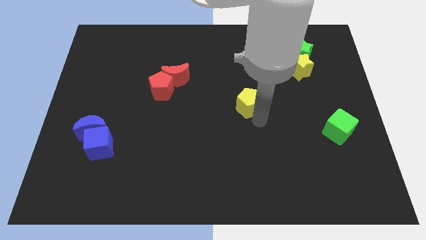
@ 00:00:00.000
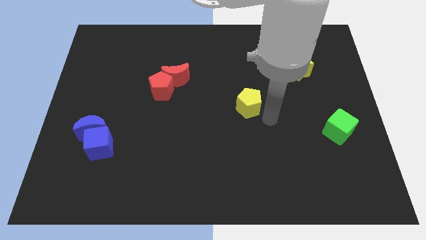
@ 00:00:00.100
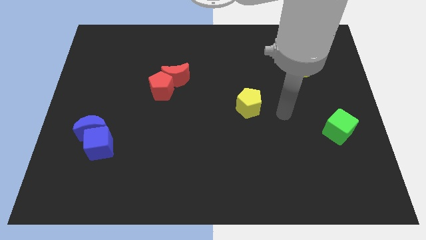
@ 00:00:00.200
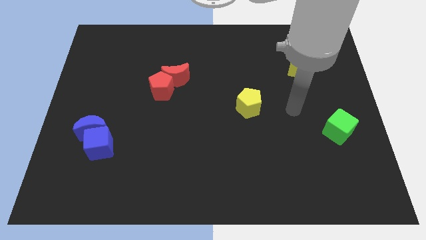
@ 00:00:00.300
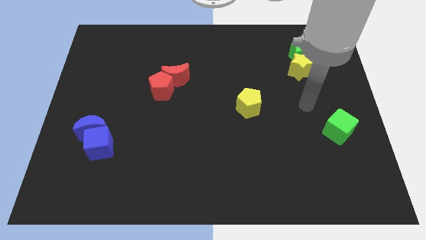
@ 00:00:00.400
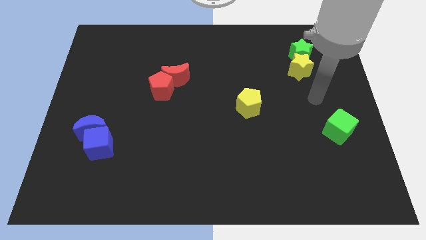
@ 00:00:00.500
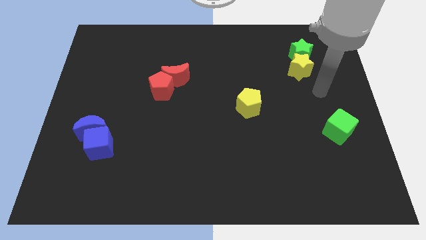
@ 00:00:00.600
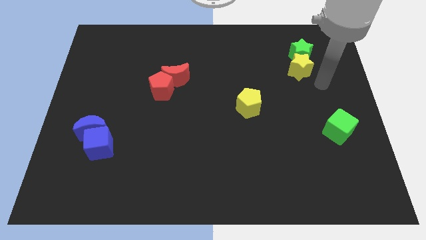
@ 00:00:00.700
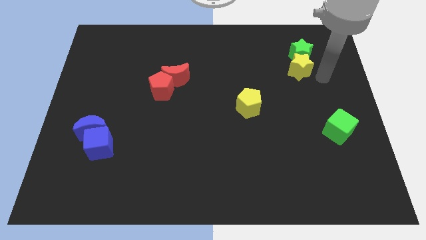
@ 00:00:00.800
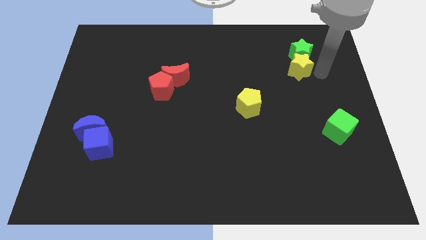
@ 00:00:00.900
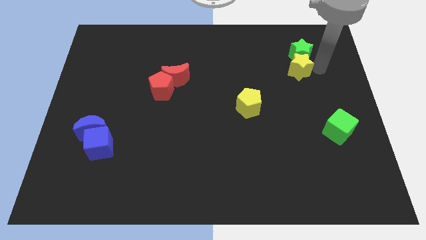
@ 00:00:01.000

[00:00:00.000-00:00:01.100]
move your arm to the right of the yellow star

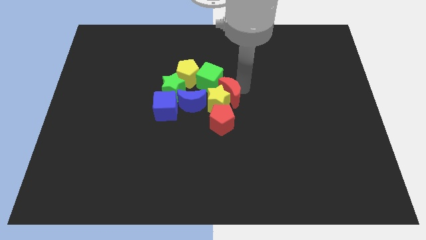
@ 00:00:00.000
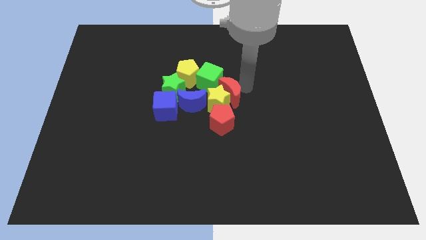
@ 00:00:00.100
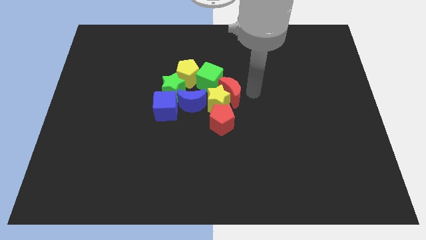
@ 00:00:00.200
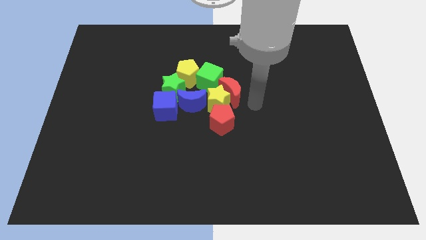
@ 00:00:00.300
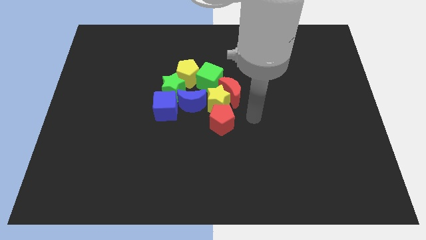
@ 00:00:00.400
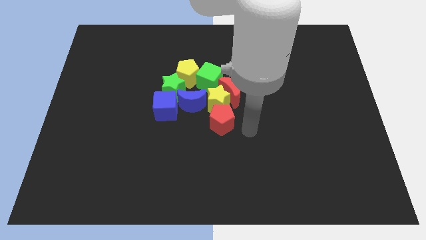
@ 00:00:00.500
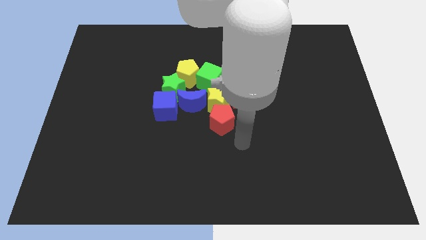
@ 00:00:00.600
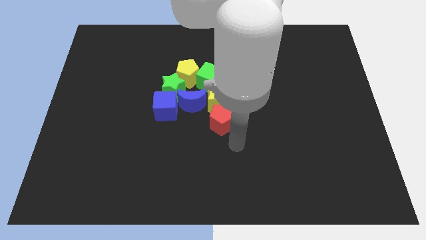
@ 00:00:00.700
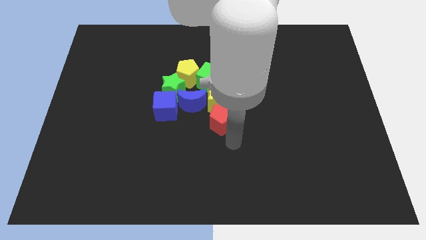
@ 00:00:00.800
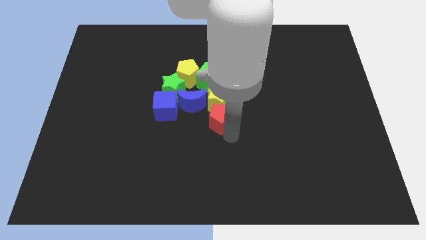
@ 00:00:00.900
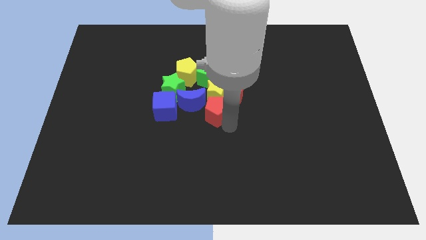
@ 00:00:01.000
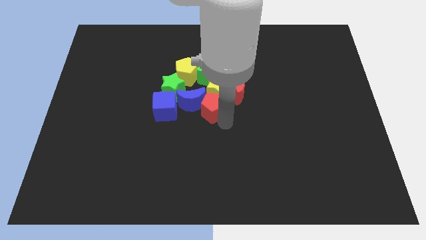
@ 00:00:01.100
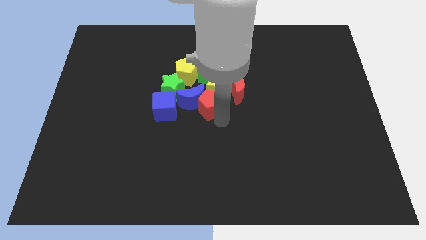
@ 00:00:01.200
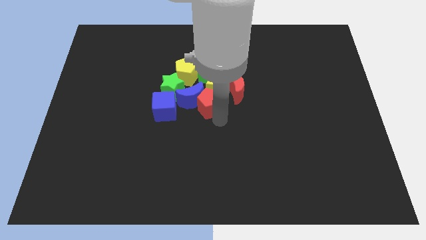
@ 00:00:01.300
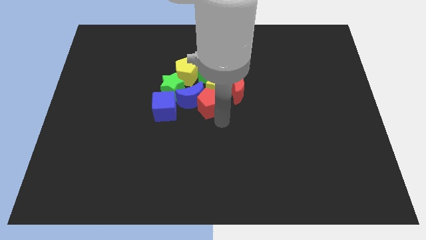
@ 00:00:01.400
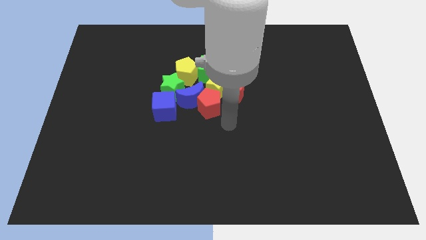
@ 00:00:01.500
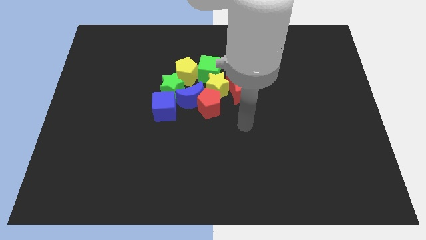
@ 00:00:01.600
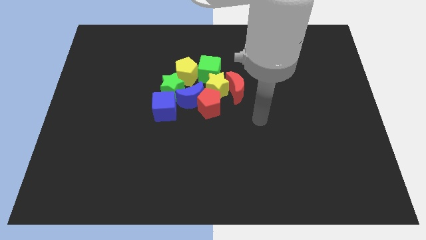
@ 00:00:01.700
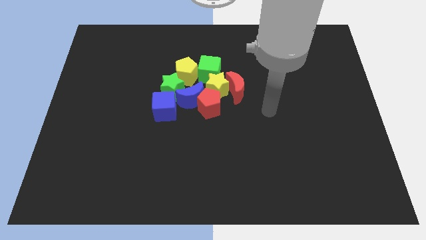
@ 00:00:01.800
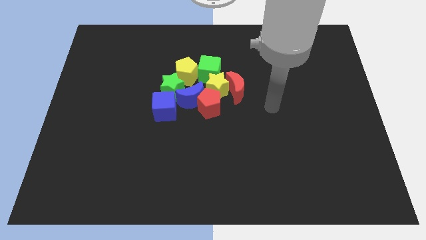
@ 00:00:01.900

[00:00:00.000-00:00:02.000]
group up all the blocks together at center of the board

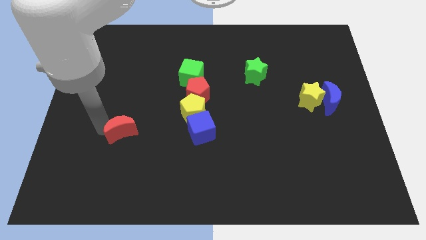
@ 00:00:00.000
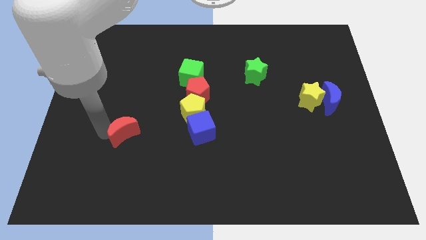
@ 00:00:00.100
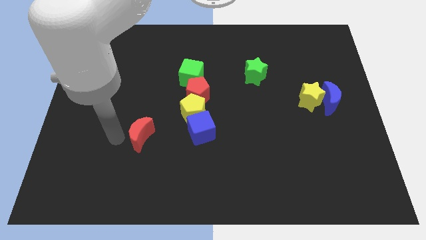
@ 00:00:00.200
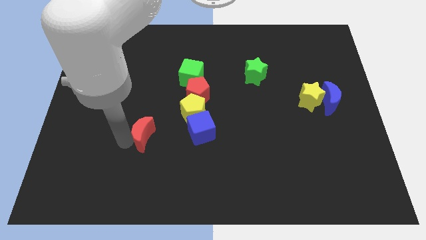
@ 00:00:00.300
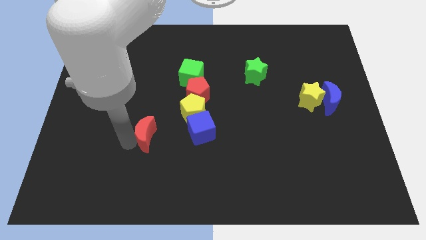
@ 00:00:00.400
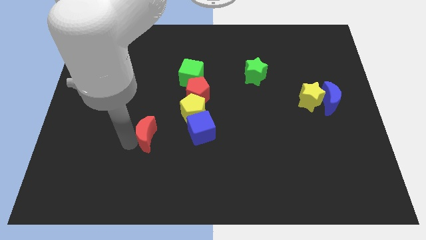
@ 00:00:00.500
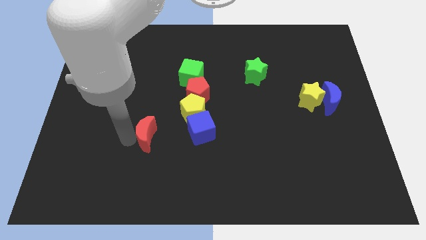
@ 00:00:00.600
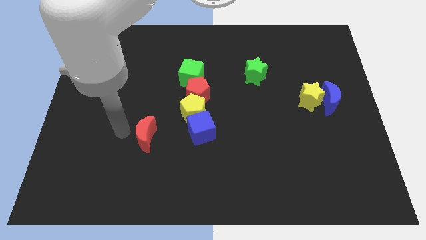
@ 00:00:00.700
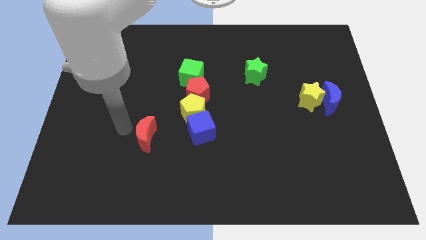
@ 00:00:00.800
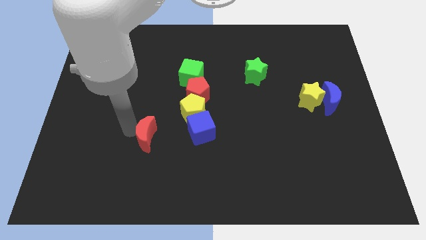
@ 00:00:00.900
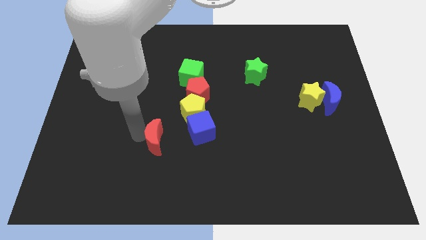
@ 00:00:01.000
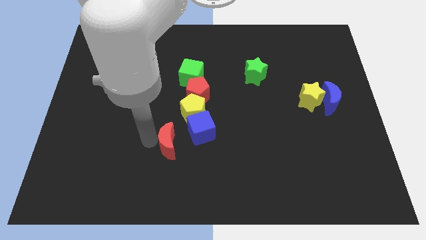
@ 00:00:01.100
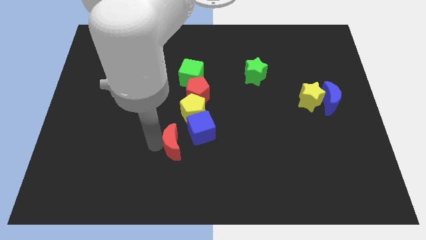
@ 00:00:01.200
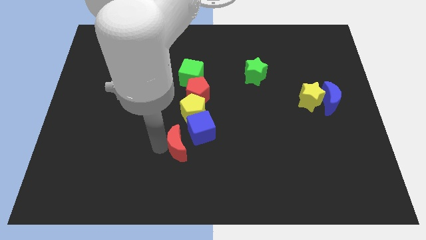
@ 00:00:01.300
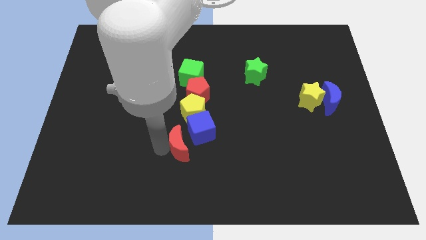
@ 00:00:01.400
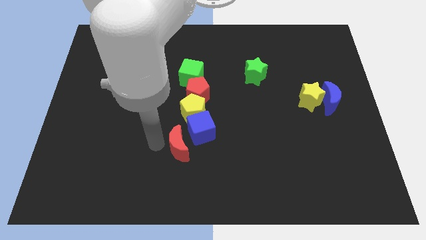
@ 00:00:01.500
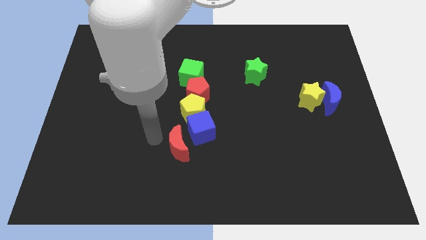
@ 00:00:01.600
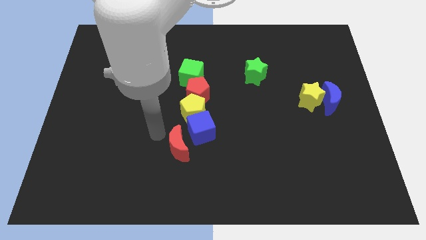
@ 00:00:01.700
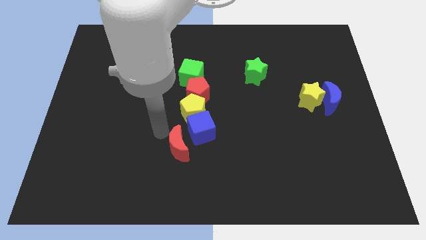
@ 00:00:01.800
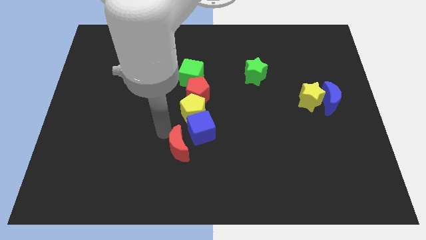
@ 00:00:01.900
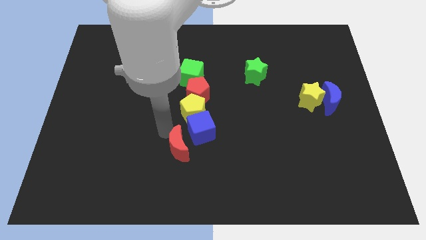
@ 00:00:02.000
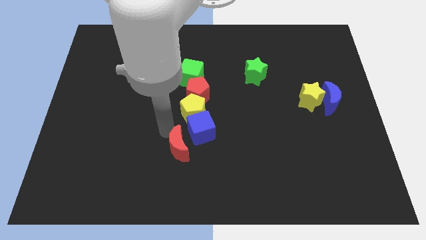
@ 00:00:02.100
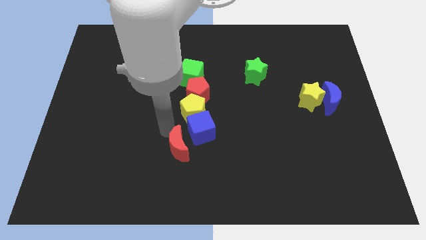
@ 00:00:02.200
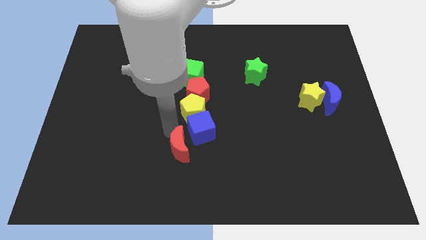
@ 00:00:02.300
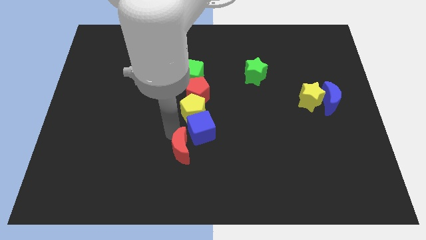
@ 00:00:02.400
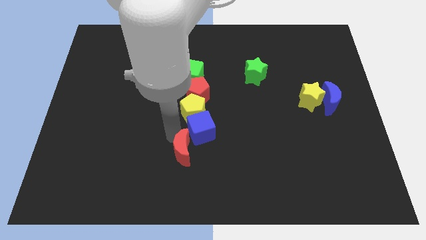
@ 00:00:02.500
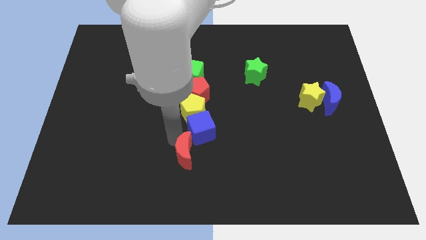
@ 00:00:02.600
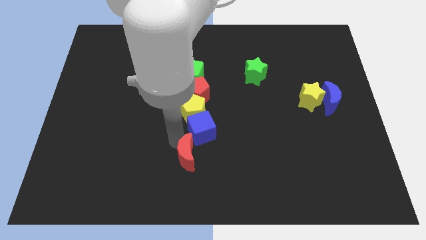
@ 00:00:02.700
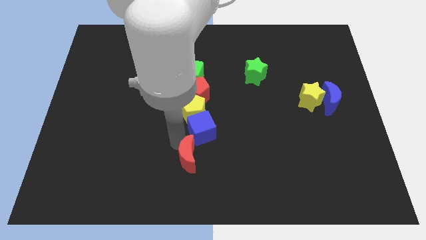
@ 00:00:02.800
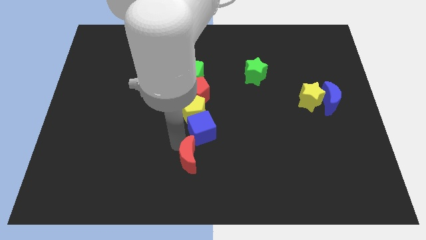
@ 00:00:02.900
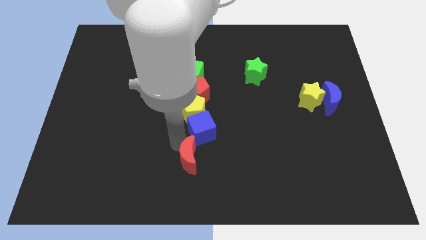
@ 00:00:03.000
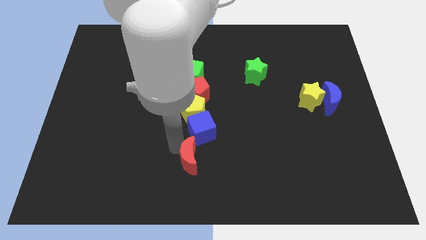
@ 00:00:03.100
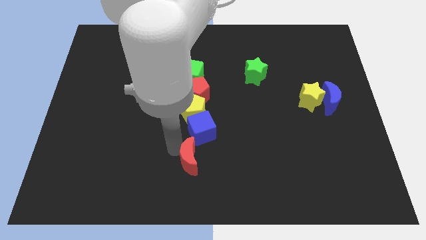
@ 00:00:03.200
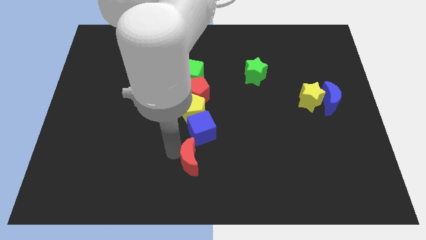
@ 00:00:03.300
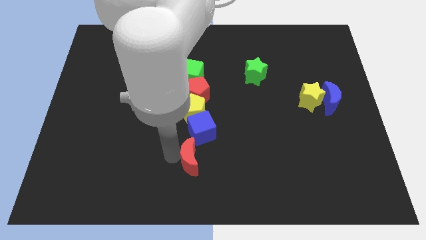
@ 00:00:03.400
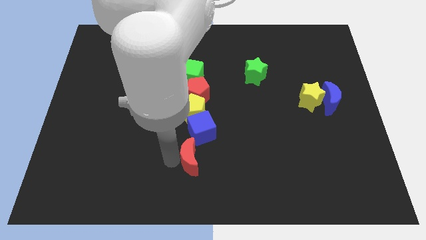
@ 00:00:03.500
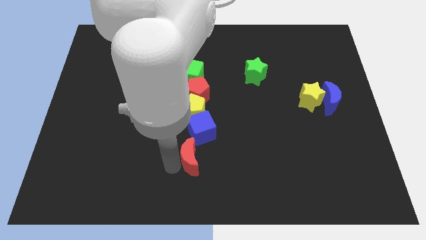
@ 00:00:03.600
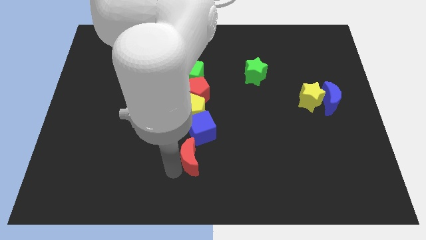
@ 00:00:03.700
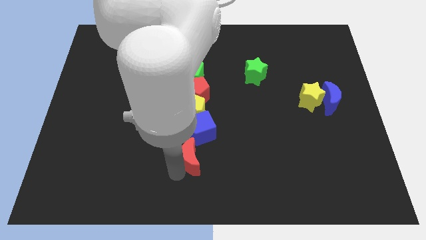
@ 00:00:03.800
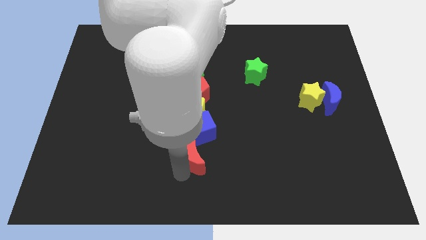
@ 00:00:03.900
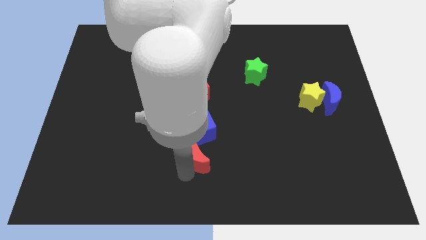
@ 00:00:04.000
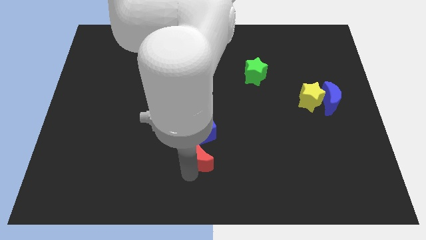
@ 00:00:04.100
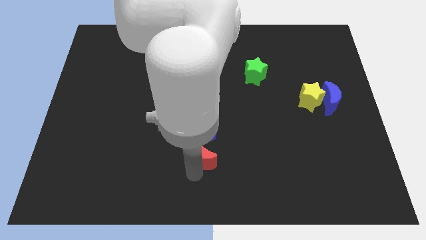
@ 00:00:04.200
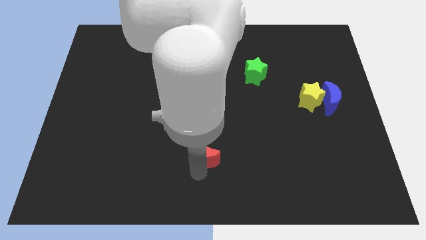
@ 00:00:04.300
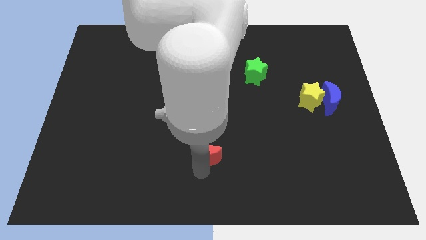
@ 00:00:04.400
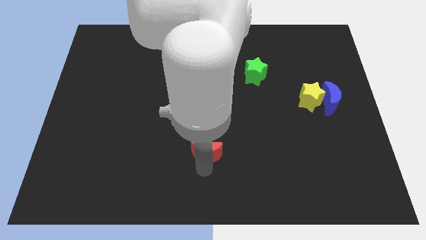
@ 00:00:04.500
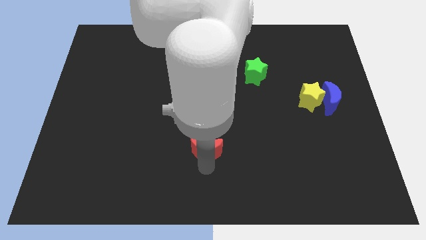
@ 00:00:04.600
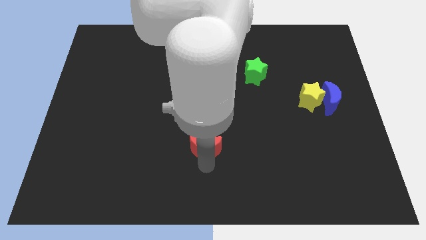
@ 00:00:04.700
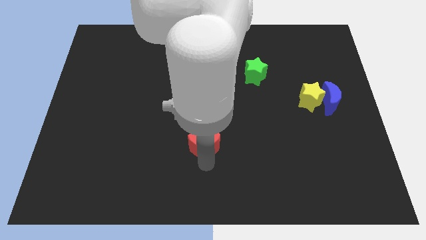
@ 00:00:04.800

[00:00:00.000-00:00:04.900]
move the red crescent to the bottom of the blue cube

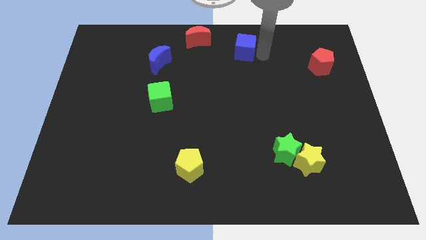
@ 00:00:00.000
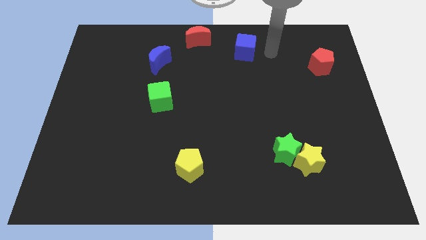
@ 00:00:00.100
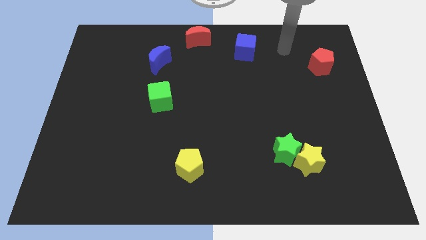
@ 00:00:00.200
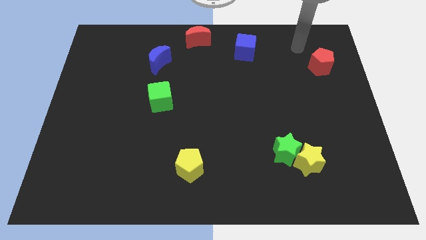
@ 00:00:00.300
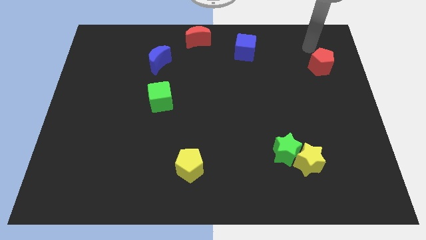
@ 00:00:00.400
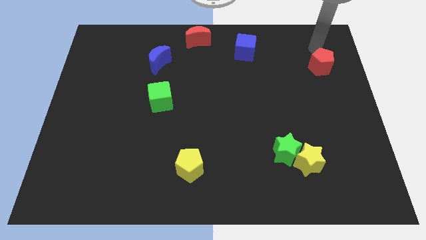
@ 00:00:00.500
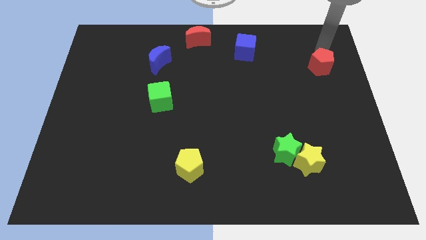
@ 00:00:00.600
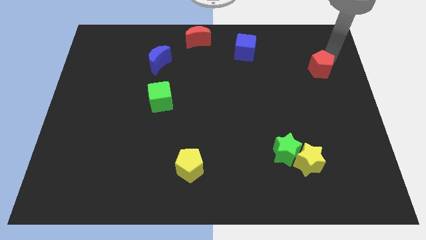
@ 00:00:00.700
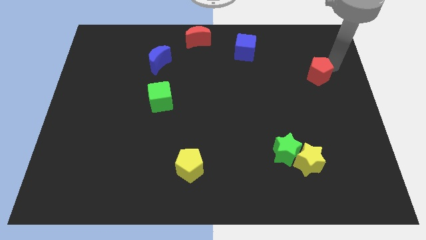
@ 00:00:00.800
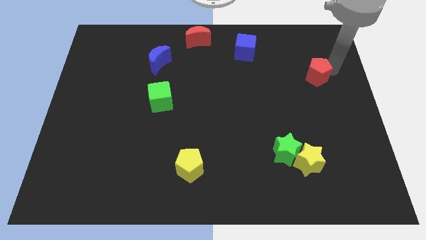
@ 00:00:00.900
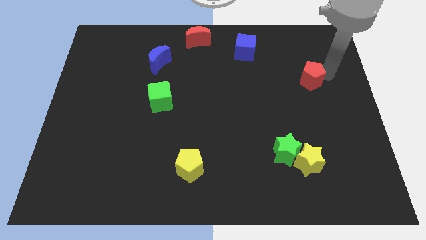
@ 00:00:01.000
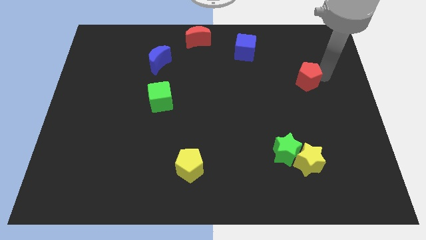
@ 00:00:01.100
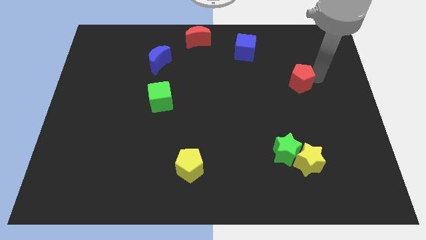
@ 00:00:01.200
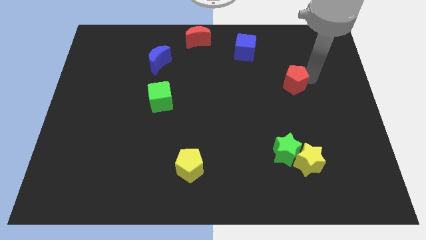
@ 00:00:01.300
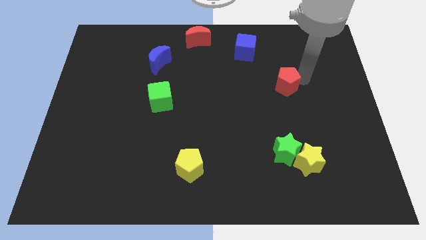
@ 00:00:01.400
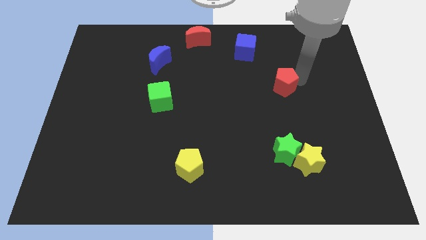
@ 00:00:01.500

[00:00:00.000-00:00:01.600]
move the red pentagon to the bottom right of the blue cube
